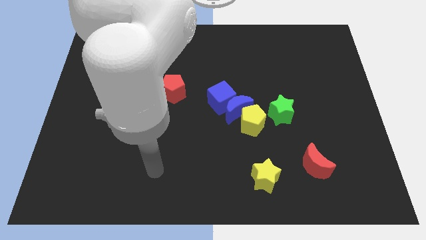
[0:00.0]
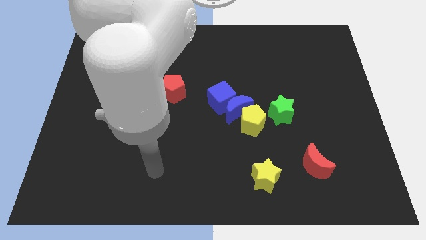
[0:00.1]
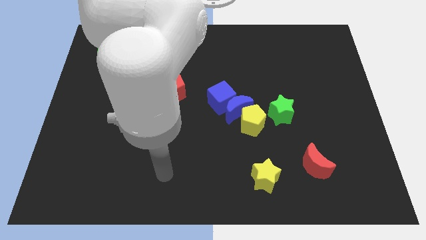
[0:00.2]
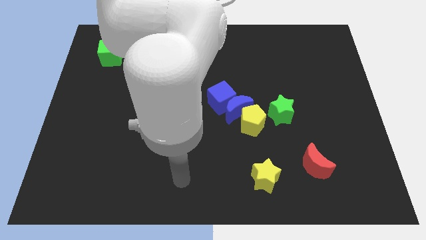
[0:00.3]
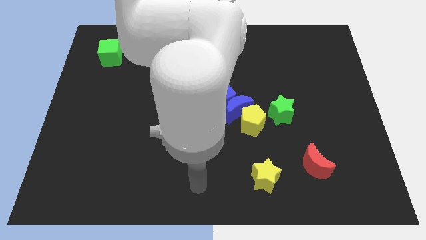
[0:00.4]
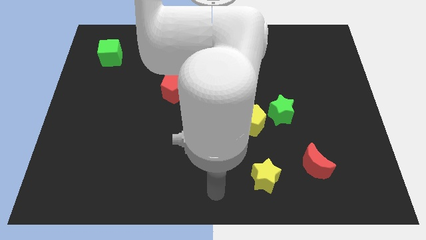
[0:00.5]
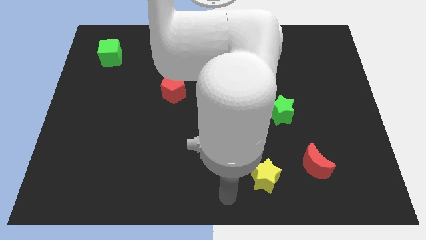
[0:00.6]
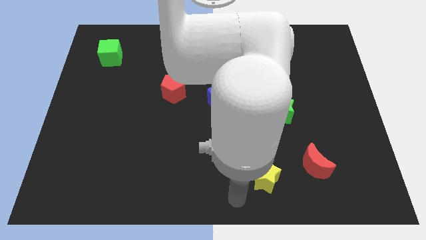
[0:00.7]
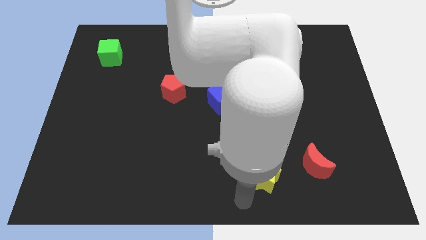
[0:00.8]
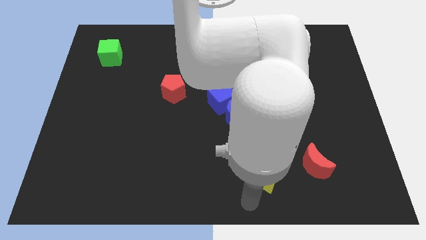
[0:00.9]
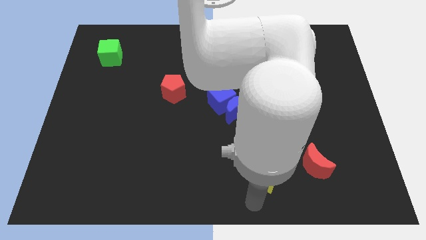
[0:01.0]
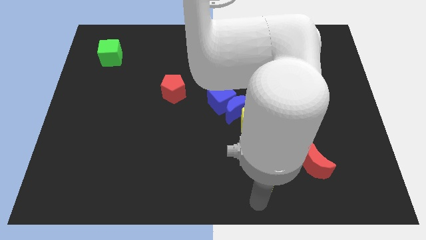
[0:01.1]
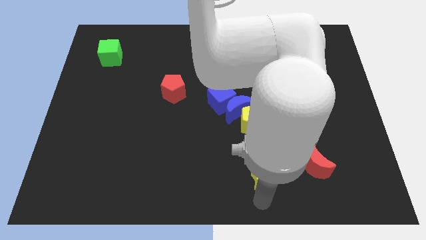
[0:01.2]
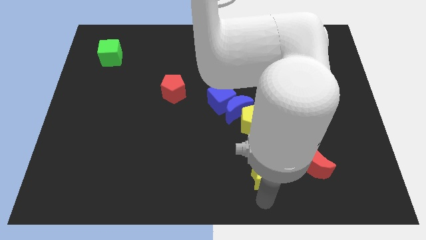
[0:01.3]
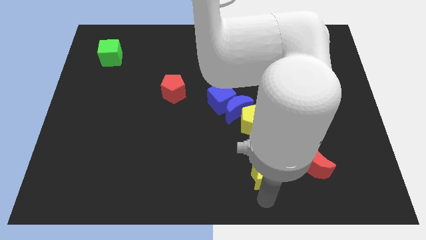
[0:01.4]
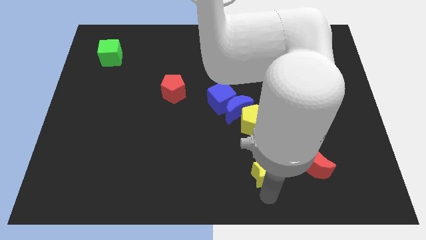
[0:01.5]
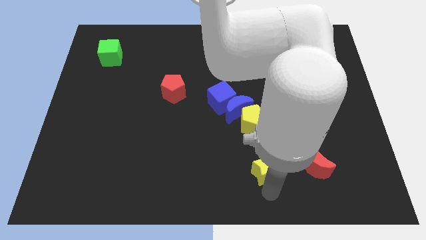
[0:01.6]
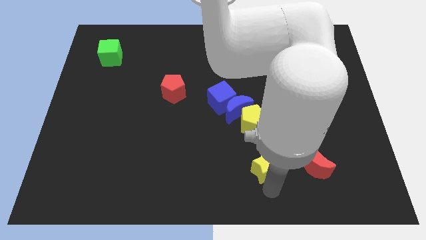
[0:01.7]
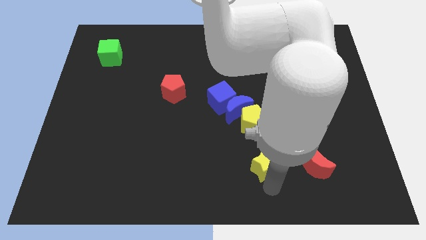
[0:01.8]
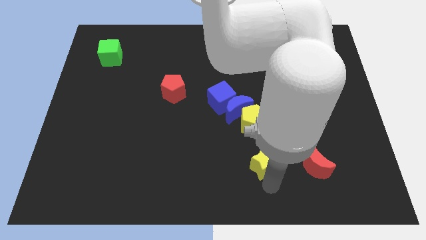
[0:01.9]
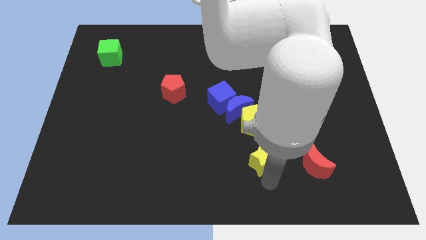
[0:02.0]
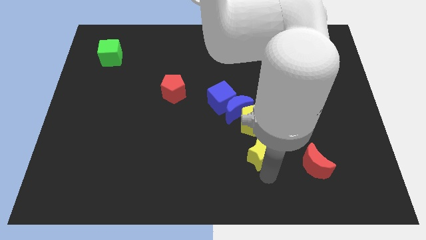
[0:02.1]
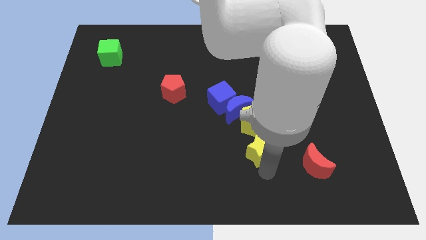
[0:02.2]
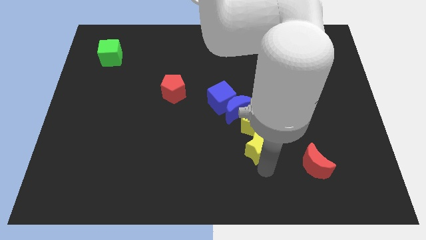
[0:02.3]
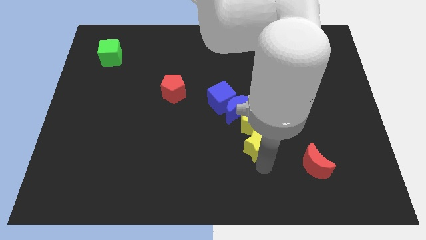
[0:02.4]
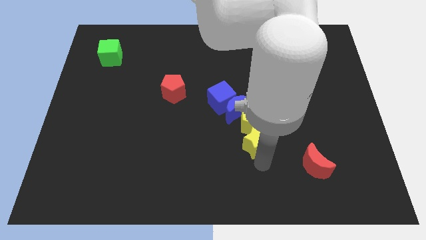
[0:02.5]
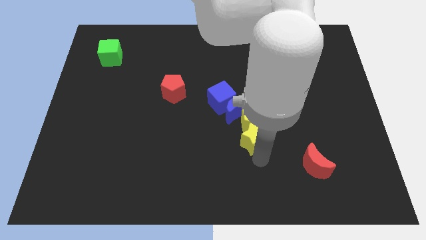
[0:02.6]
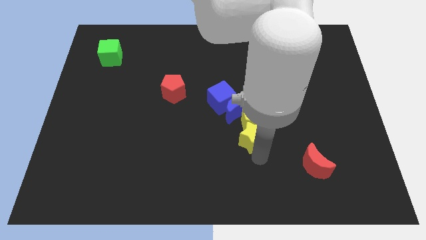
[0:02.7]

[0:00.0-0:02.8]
move the yellow star towards the yellow pentagon

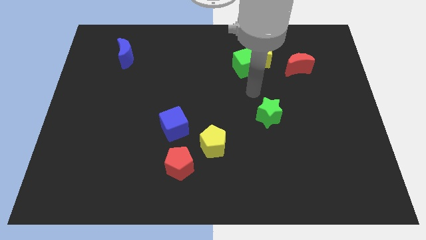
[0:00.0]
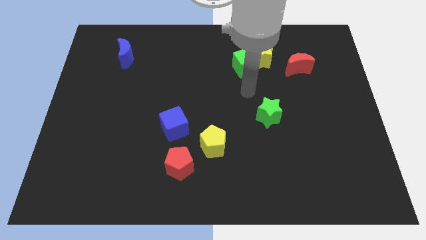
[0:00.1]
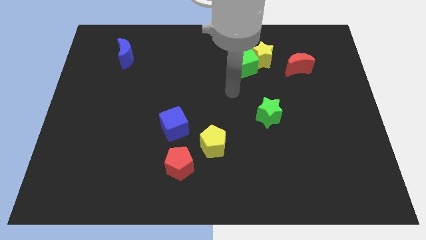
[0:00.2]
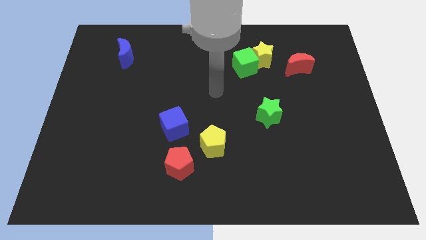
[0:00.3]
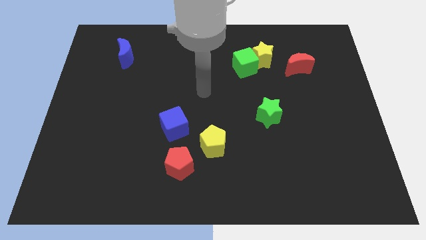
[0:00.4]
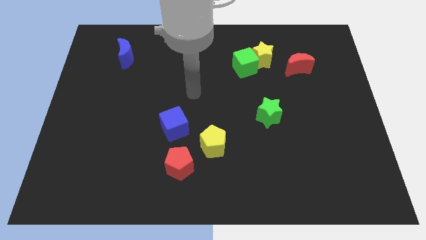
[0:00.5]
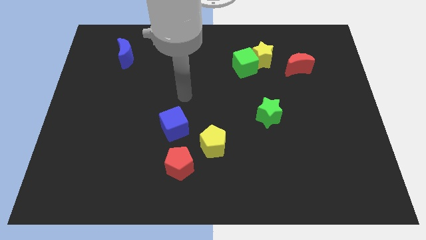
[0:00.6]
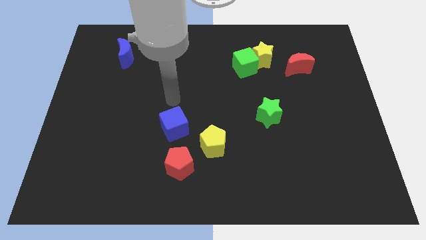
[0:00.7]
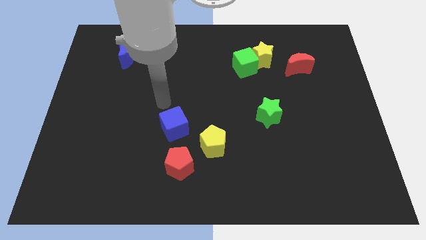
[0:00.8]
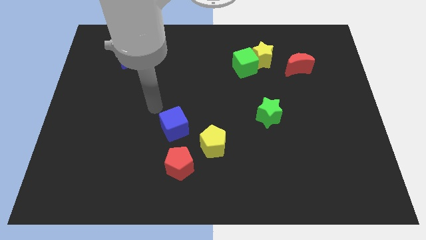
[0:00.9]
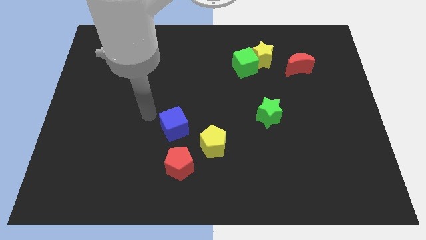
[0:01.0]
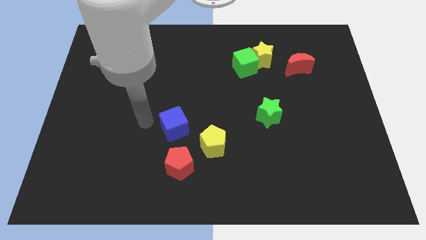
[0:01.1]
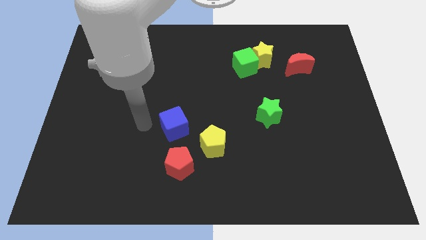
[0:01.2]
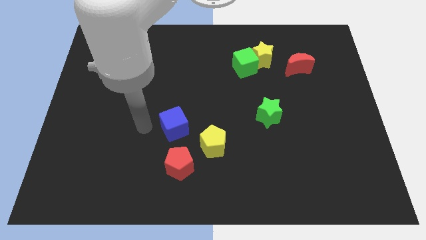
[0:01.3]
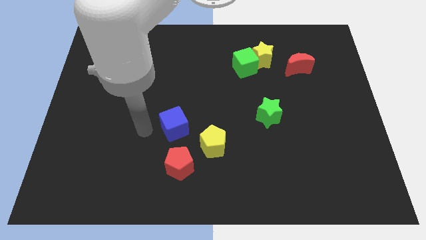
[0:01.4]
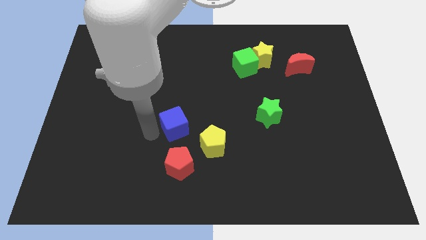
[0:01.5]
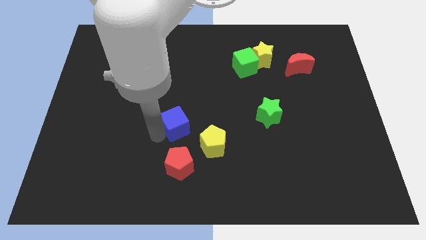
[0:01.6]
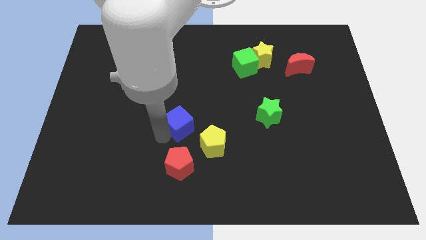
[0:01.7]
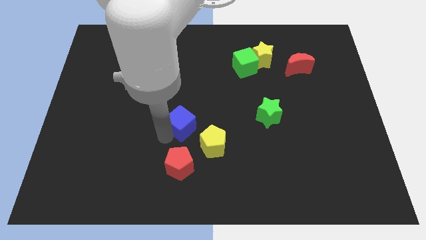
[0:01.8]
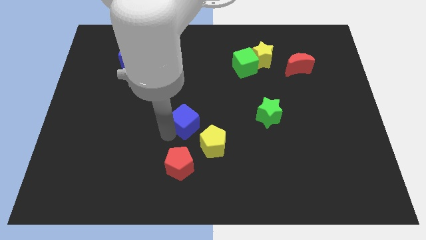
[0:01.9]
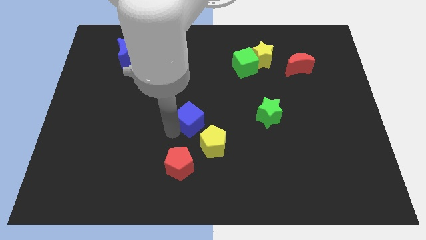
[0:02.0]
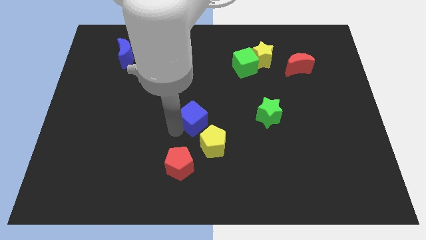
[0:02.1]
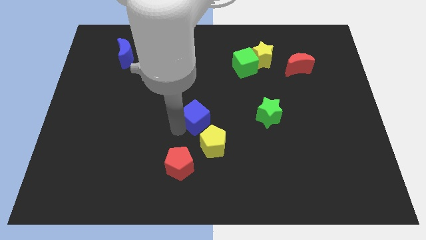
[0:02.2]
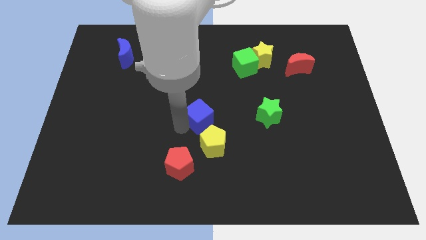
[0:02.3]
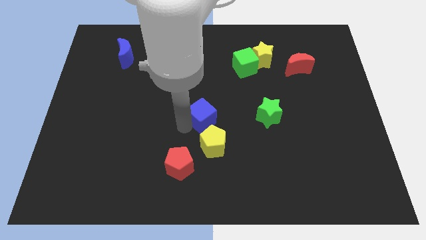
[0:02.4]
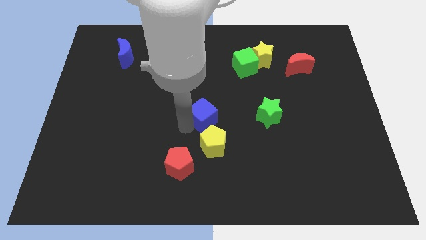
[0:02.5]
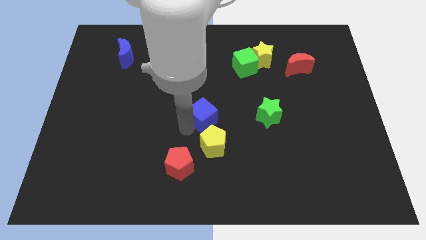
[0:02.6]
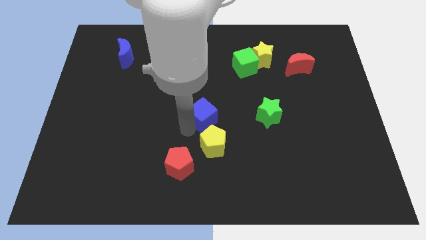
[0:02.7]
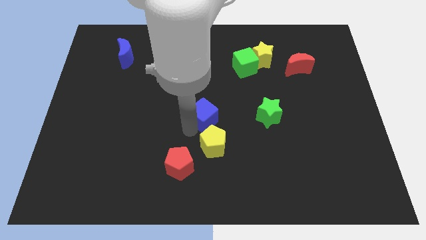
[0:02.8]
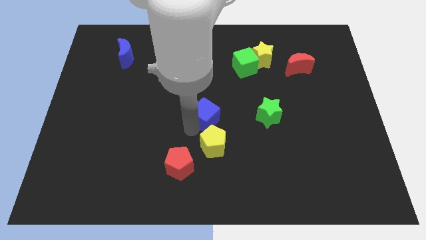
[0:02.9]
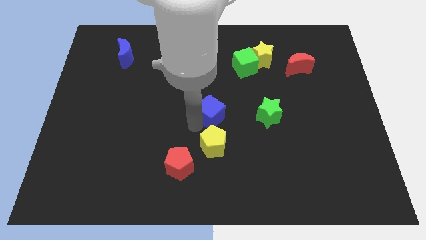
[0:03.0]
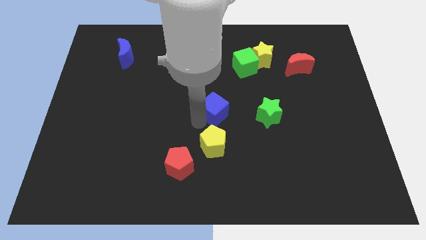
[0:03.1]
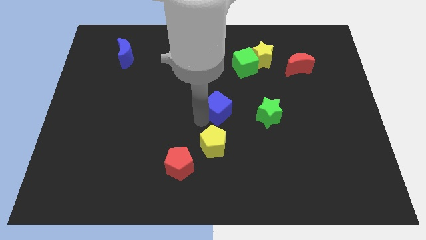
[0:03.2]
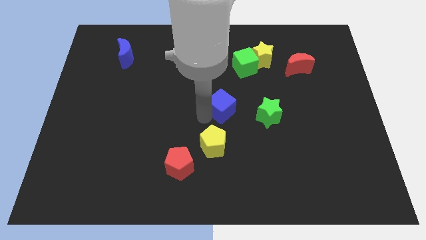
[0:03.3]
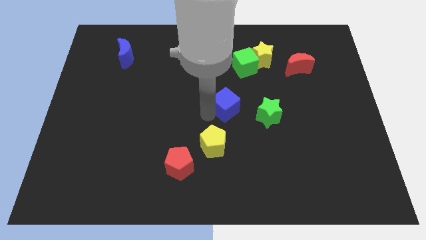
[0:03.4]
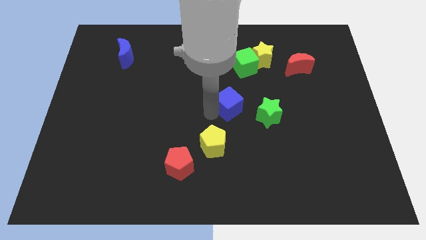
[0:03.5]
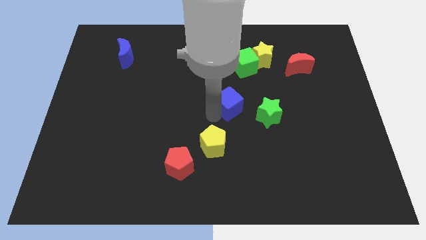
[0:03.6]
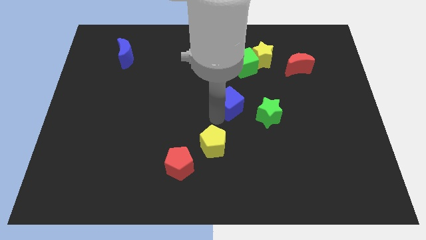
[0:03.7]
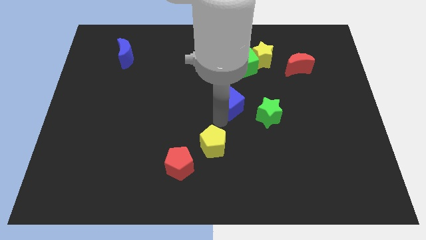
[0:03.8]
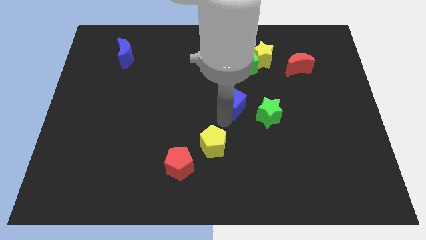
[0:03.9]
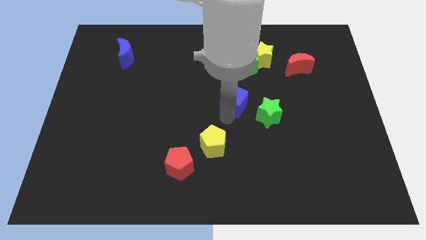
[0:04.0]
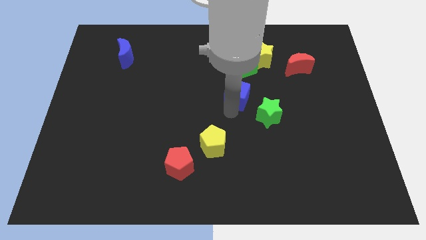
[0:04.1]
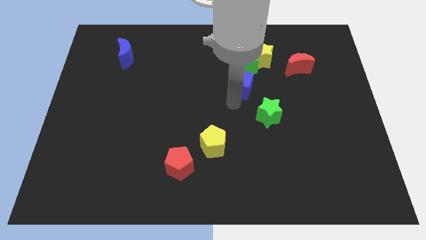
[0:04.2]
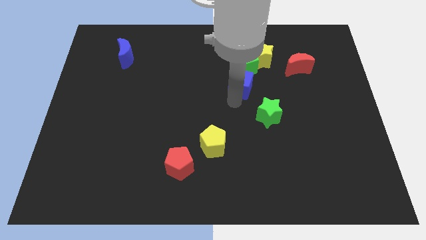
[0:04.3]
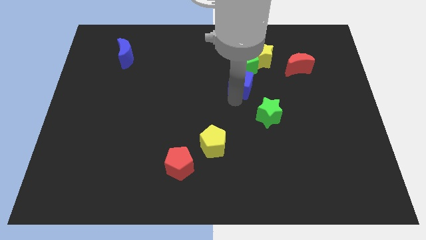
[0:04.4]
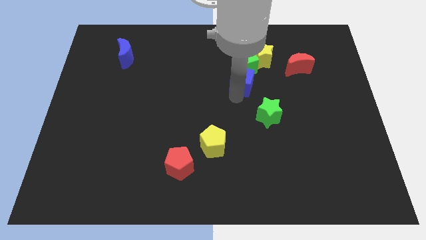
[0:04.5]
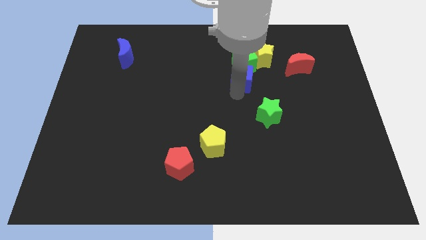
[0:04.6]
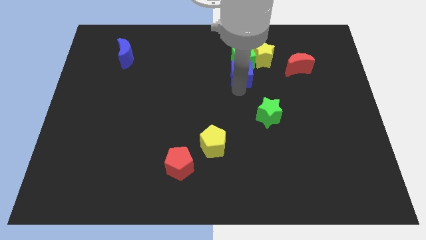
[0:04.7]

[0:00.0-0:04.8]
put the blue cube next to the green cube

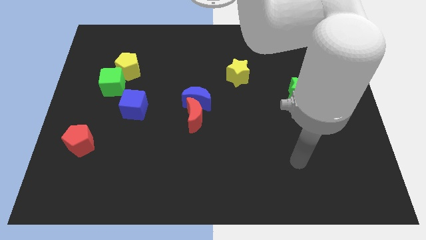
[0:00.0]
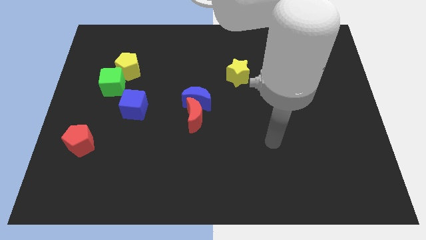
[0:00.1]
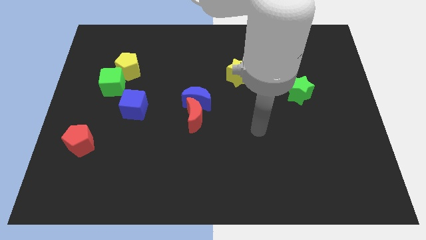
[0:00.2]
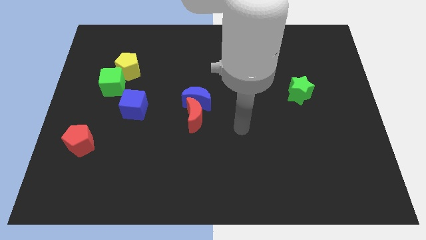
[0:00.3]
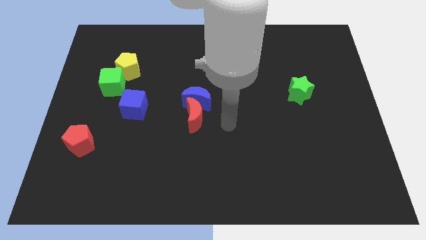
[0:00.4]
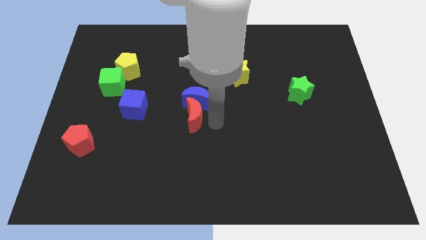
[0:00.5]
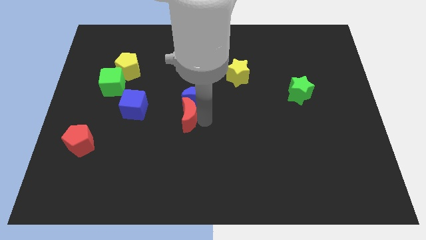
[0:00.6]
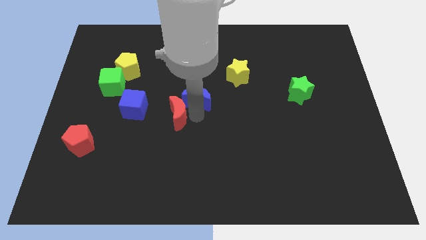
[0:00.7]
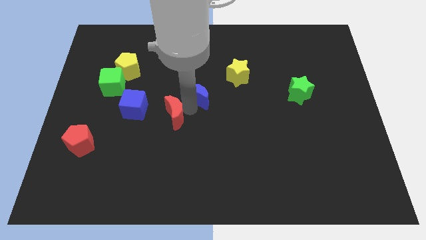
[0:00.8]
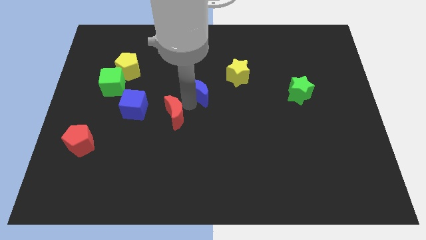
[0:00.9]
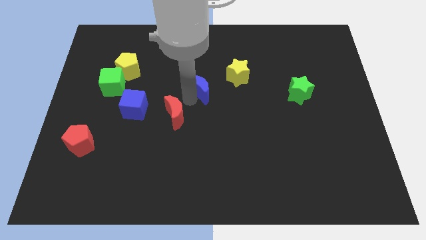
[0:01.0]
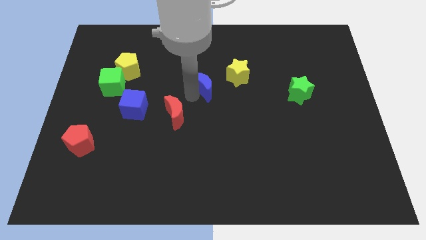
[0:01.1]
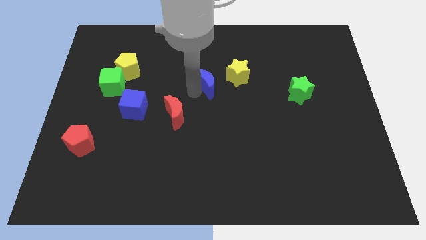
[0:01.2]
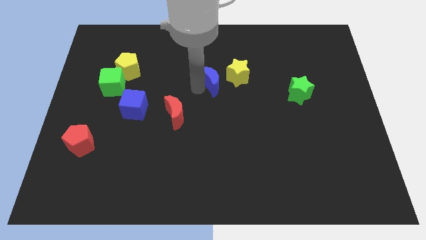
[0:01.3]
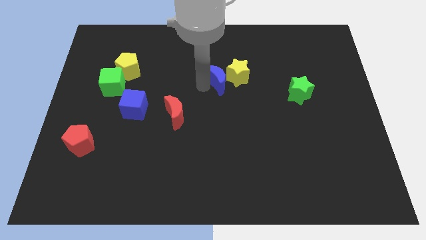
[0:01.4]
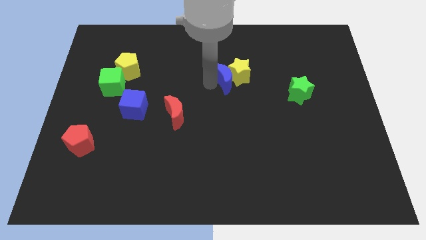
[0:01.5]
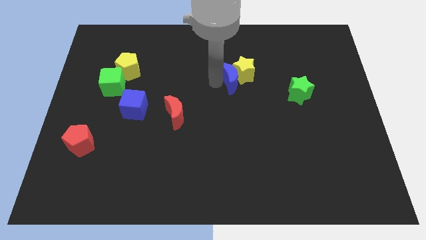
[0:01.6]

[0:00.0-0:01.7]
slide the blue moon next to the yellow star
